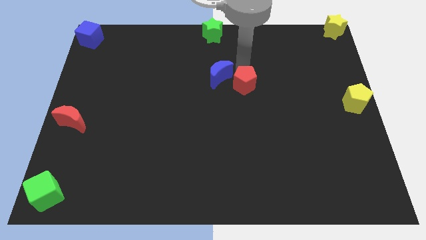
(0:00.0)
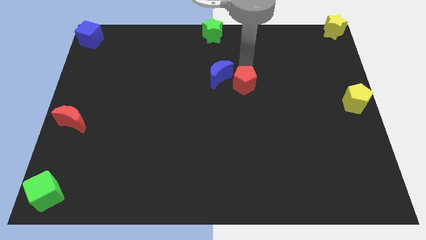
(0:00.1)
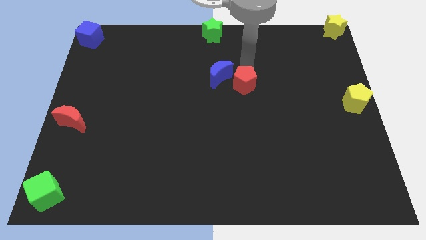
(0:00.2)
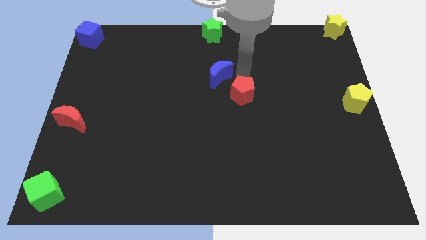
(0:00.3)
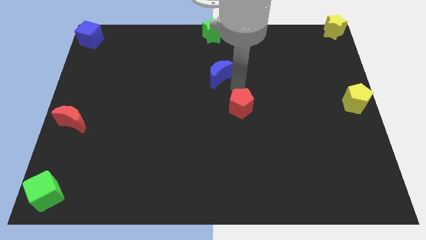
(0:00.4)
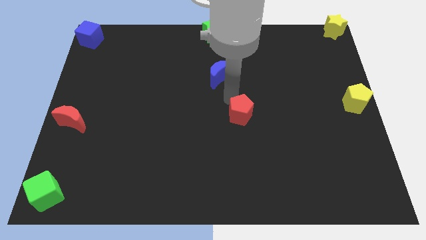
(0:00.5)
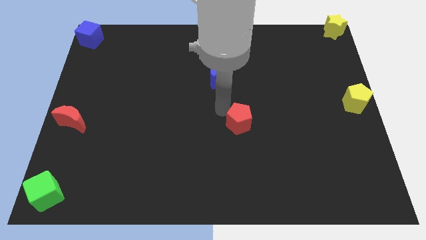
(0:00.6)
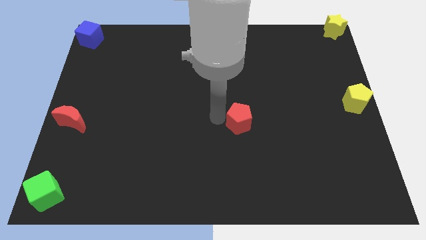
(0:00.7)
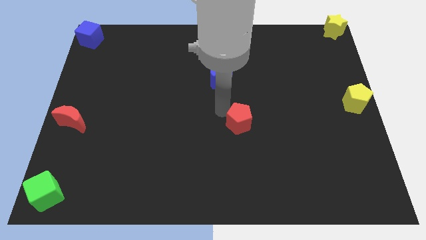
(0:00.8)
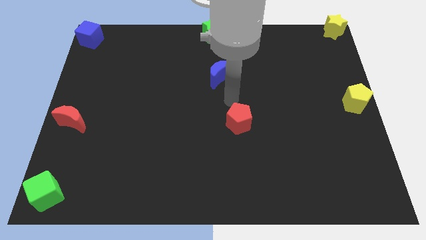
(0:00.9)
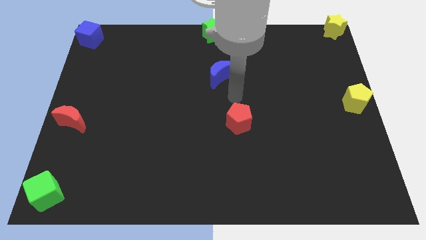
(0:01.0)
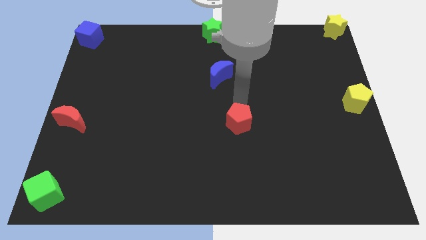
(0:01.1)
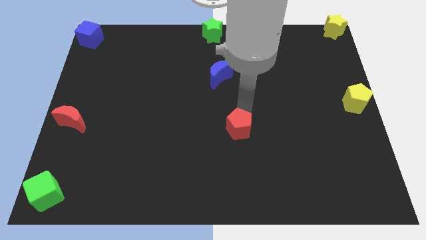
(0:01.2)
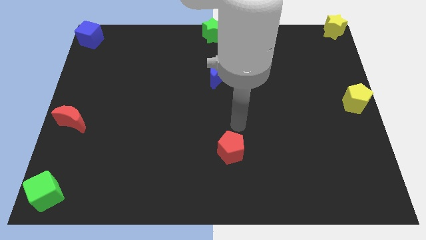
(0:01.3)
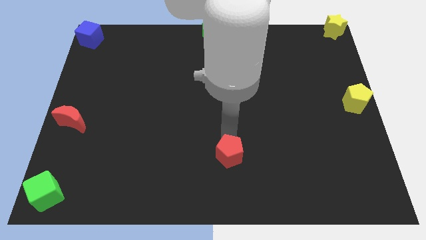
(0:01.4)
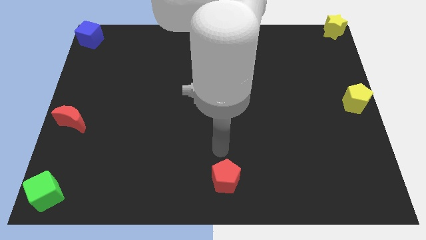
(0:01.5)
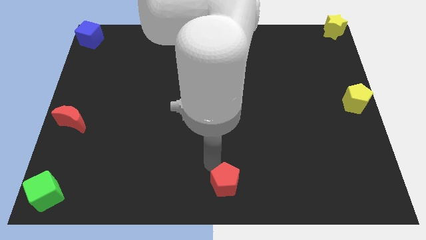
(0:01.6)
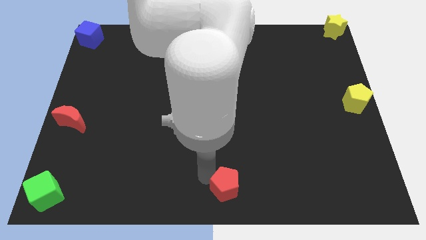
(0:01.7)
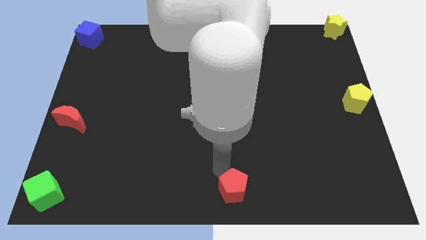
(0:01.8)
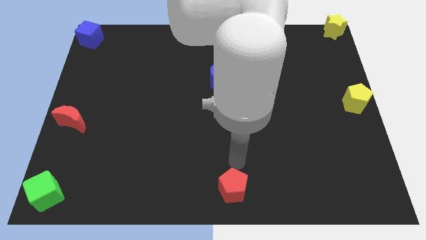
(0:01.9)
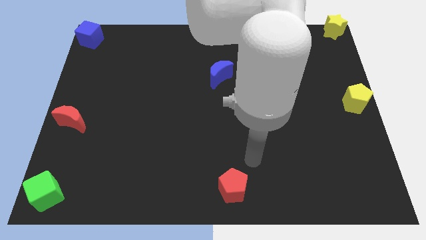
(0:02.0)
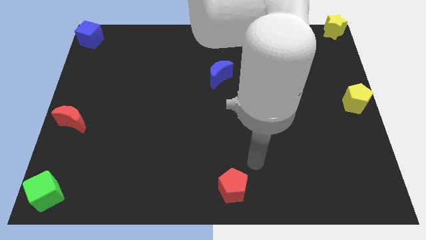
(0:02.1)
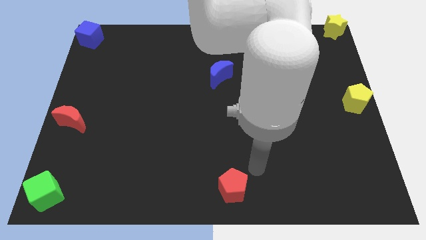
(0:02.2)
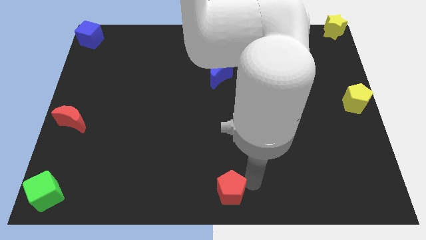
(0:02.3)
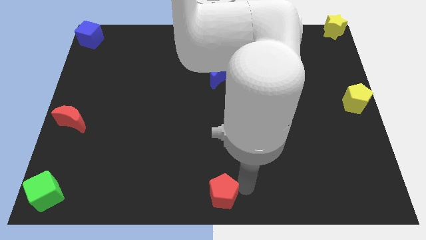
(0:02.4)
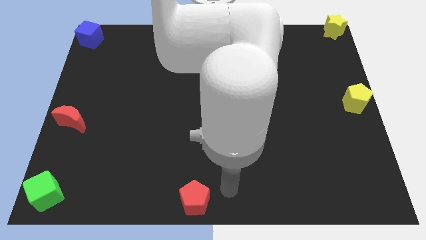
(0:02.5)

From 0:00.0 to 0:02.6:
push the red pentagon to the bottom center of the board

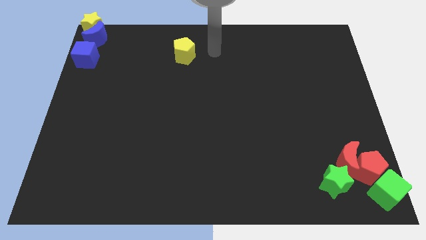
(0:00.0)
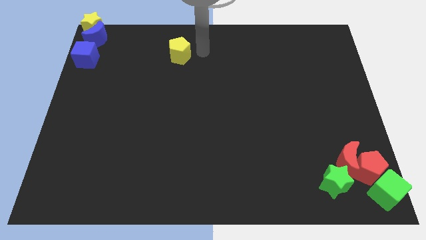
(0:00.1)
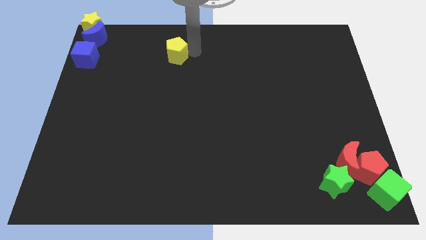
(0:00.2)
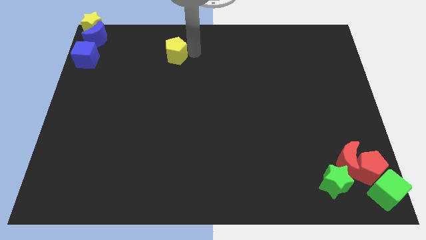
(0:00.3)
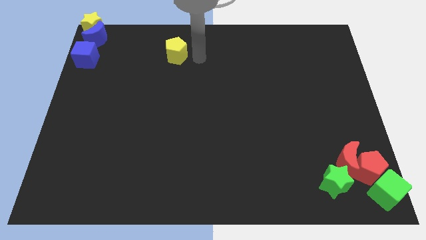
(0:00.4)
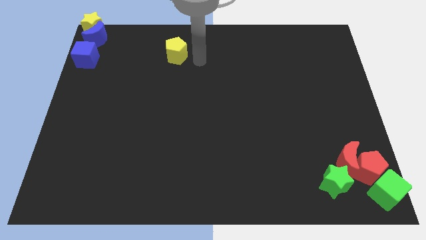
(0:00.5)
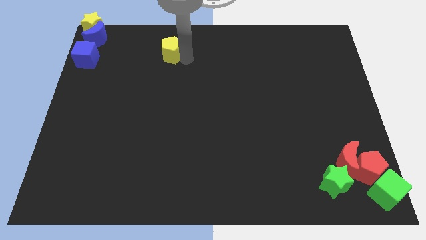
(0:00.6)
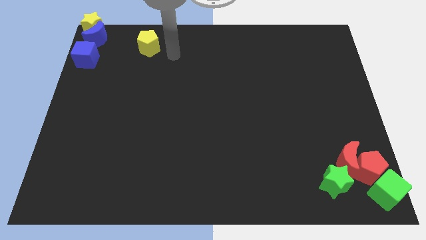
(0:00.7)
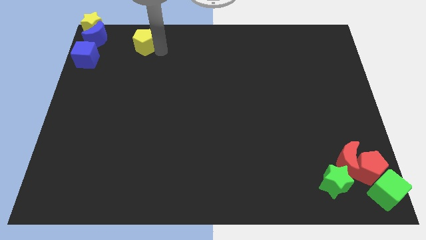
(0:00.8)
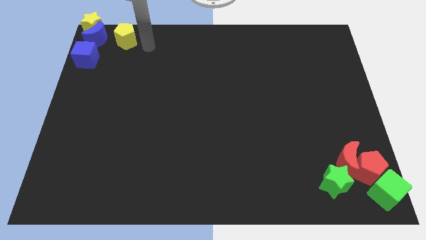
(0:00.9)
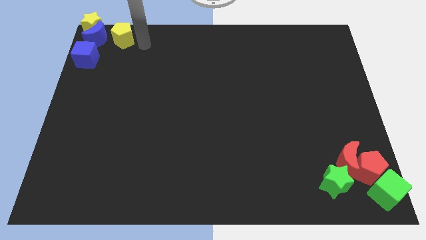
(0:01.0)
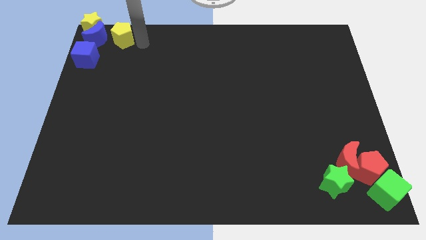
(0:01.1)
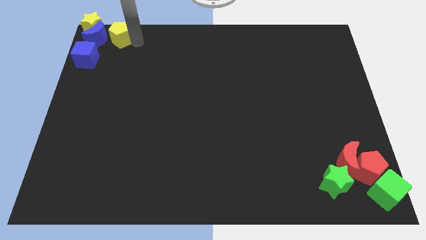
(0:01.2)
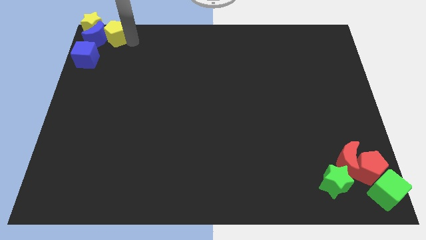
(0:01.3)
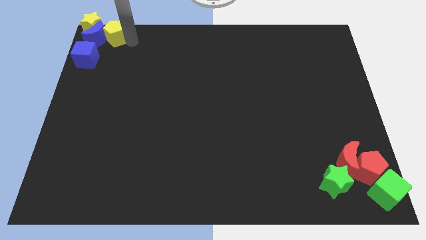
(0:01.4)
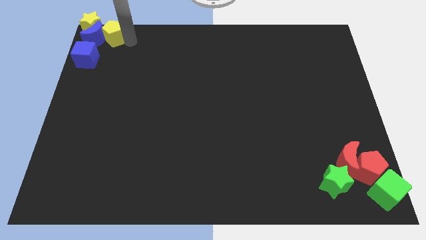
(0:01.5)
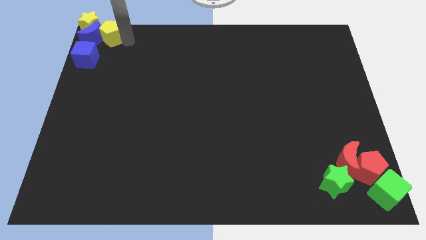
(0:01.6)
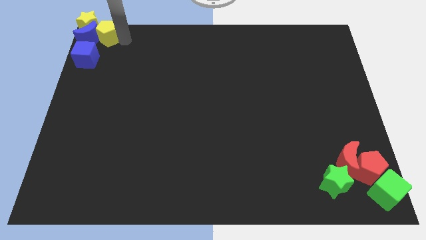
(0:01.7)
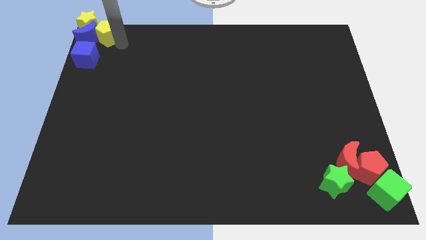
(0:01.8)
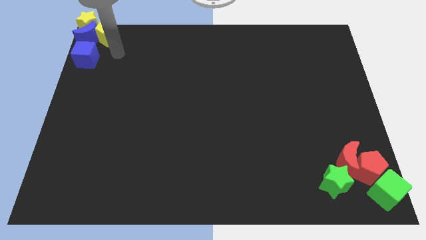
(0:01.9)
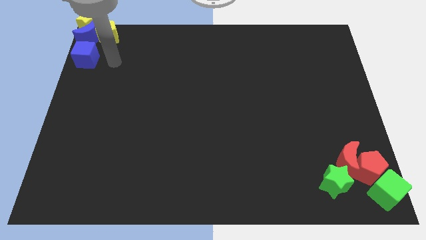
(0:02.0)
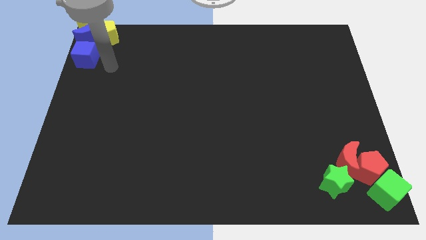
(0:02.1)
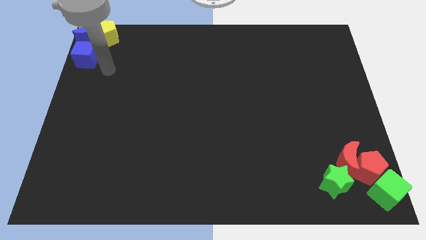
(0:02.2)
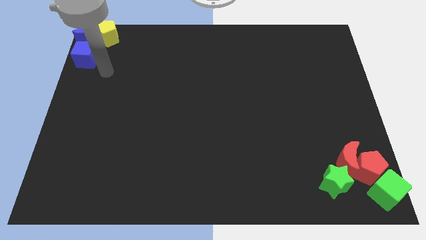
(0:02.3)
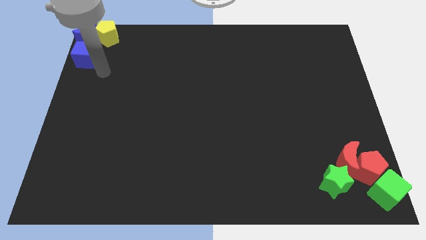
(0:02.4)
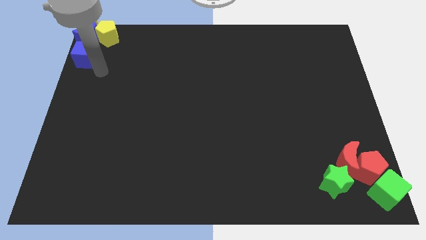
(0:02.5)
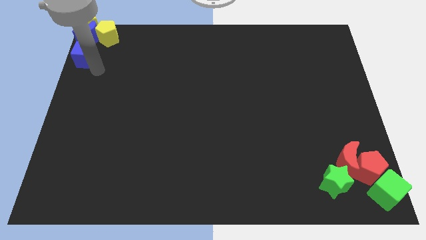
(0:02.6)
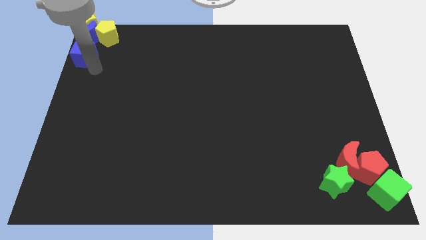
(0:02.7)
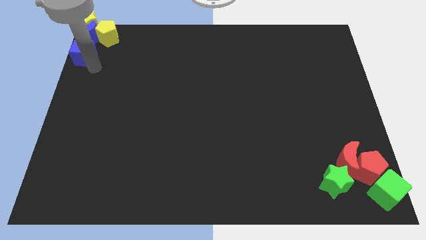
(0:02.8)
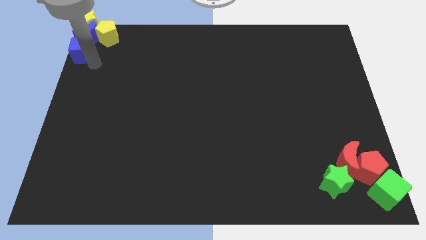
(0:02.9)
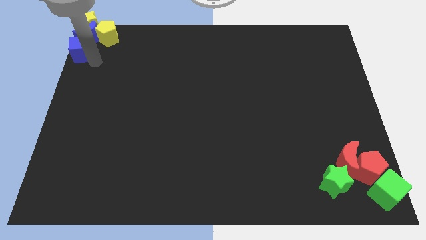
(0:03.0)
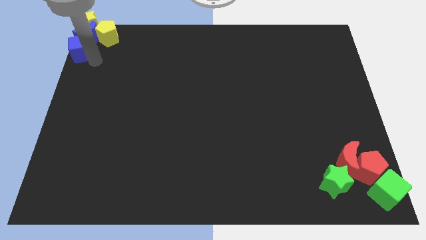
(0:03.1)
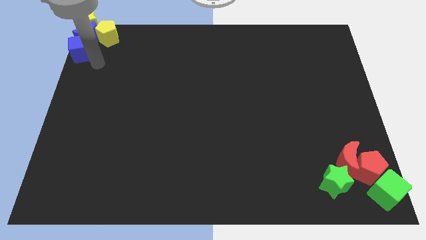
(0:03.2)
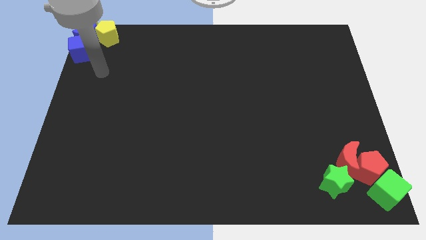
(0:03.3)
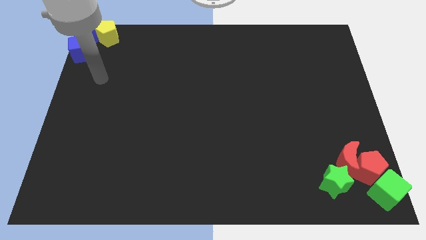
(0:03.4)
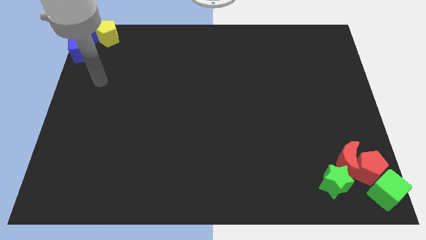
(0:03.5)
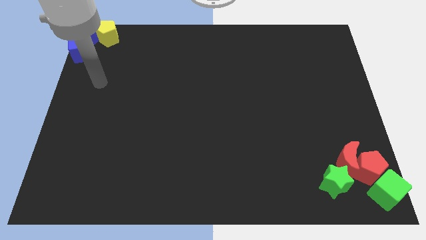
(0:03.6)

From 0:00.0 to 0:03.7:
push the blue cube into blue crescent

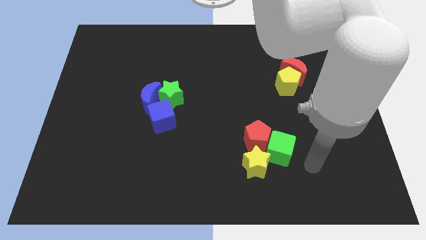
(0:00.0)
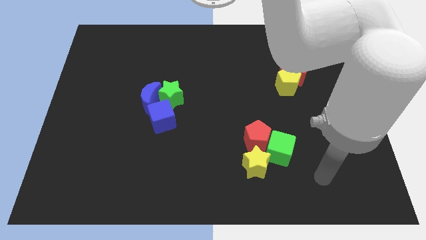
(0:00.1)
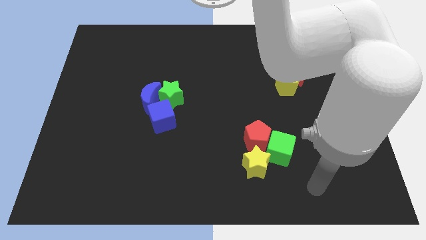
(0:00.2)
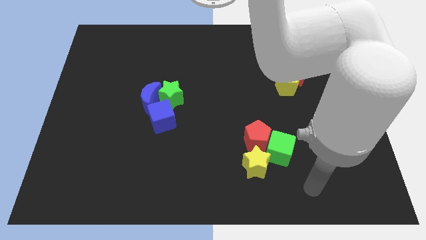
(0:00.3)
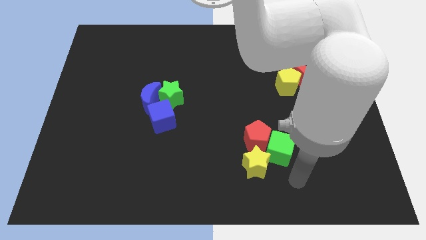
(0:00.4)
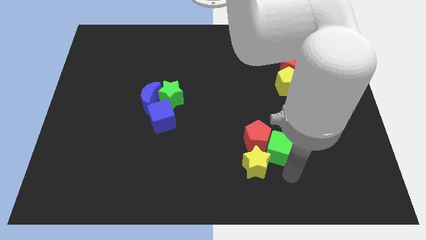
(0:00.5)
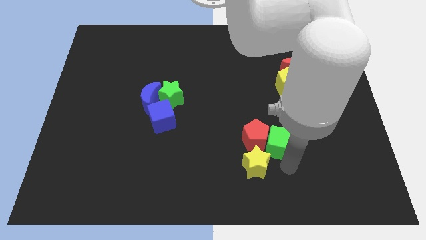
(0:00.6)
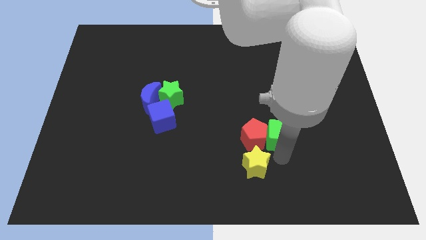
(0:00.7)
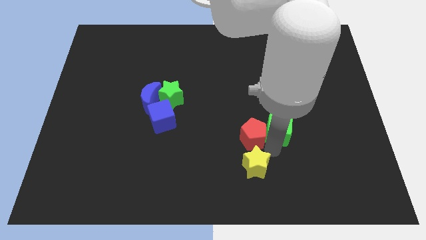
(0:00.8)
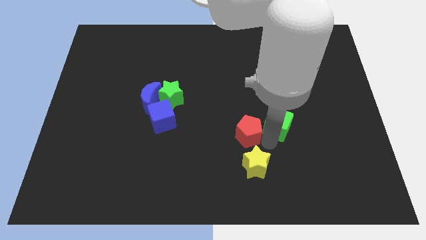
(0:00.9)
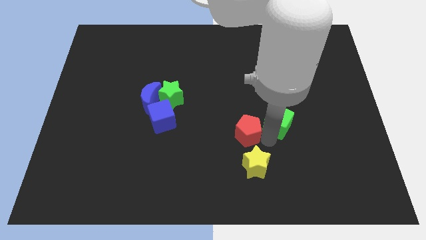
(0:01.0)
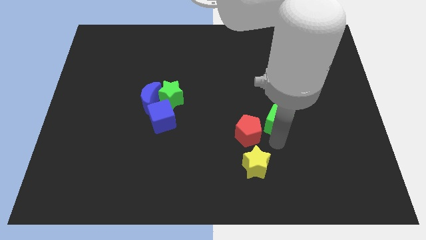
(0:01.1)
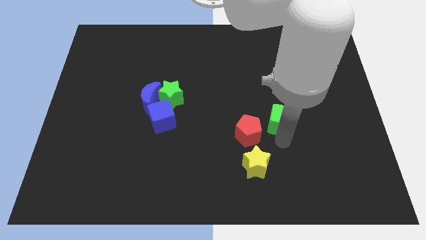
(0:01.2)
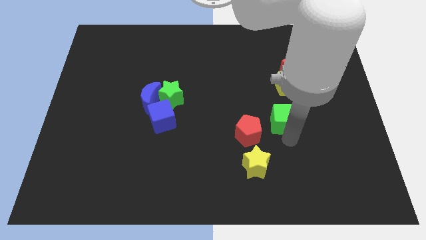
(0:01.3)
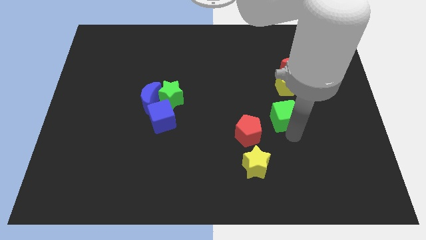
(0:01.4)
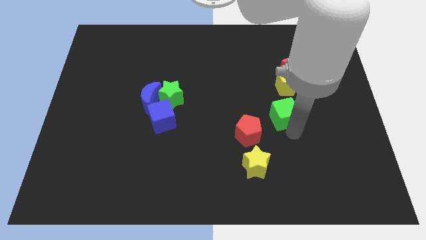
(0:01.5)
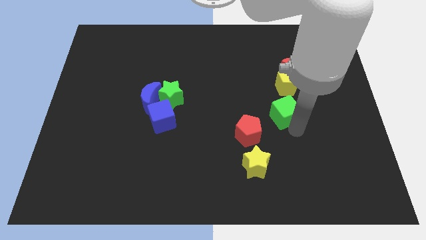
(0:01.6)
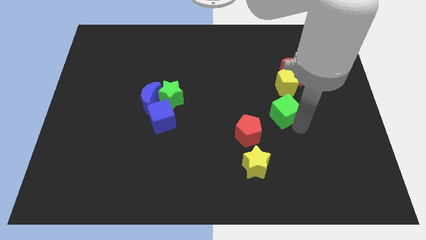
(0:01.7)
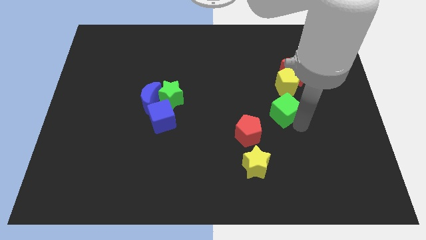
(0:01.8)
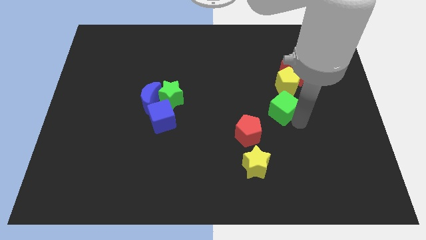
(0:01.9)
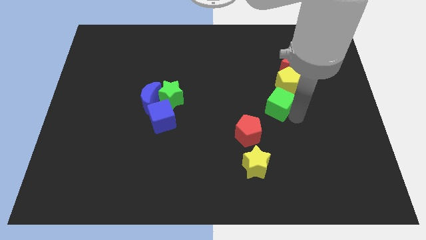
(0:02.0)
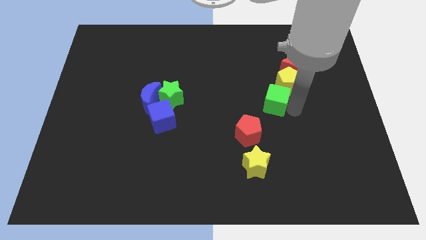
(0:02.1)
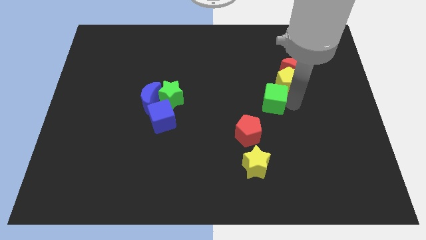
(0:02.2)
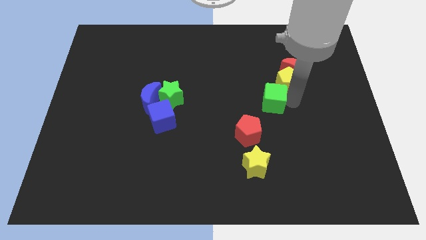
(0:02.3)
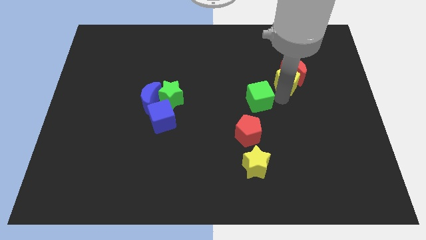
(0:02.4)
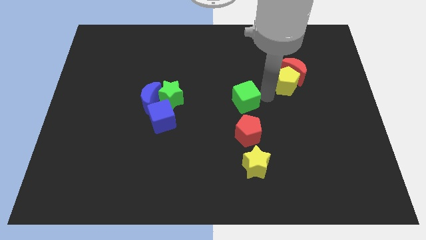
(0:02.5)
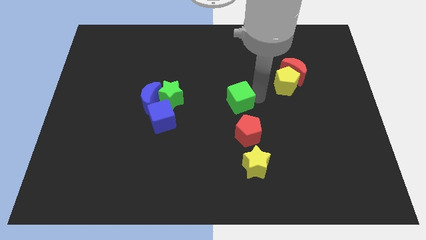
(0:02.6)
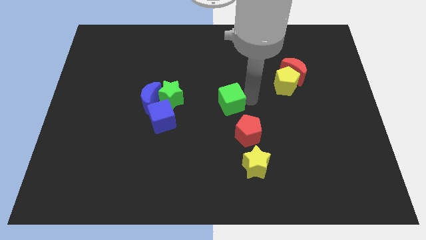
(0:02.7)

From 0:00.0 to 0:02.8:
separate the green cube and the red pentagon
